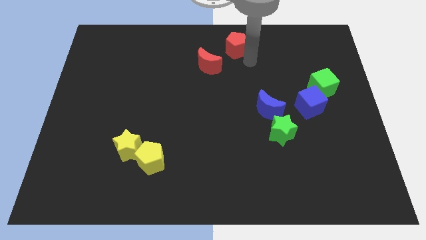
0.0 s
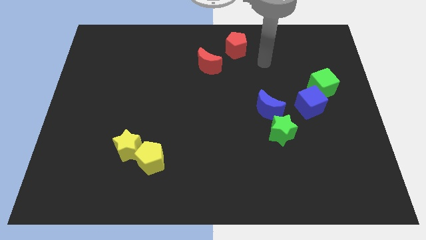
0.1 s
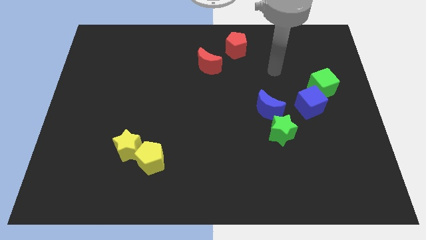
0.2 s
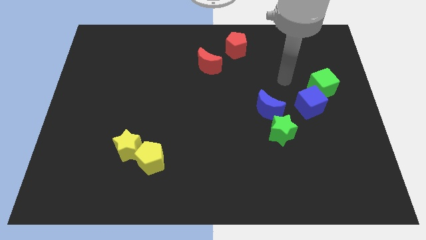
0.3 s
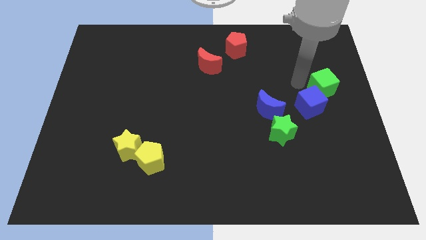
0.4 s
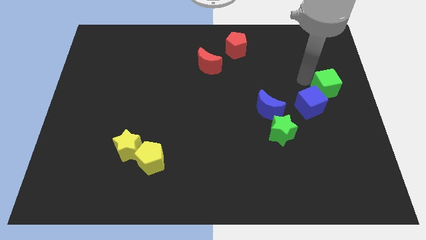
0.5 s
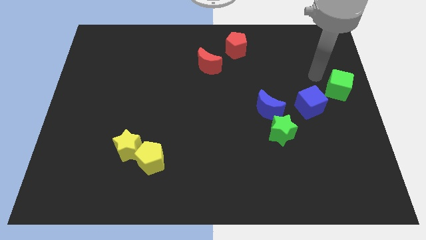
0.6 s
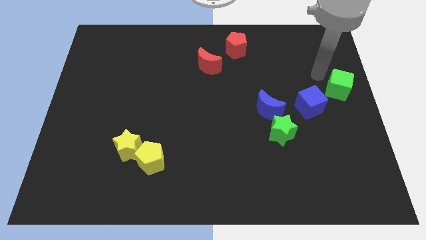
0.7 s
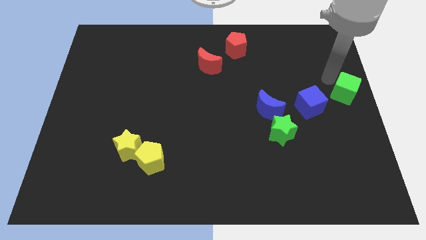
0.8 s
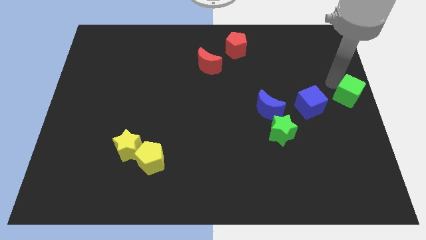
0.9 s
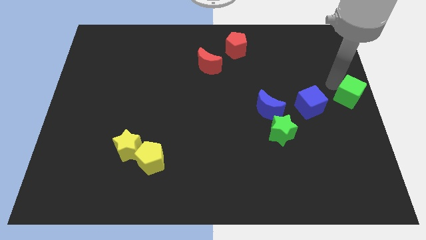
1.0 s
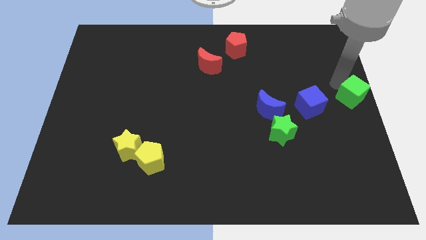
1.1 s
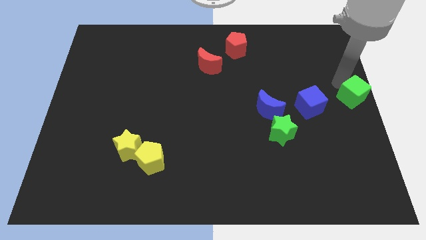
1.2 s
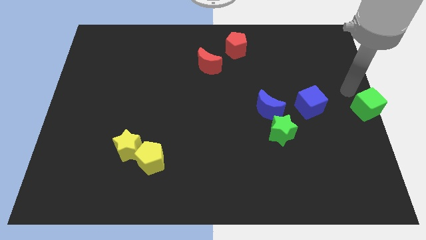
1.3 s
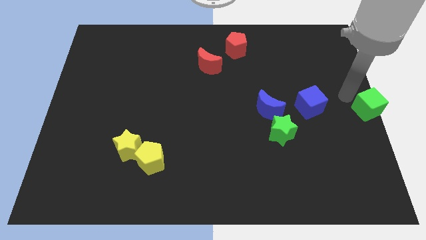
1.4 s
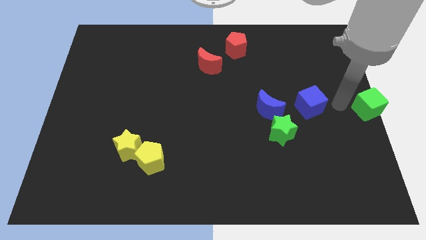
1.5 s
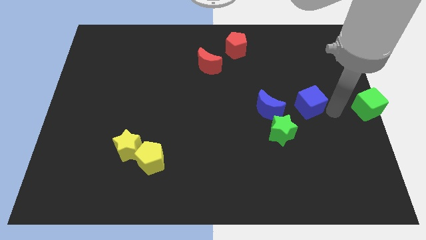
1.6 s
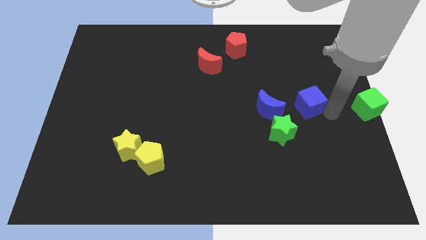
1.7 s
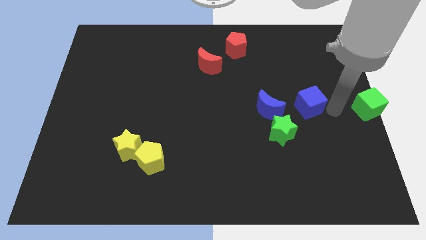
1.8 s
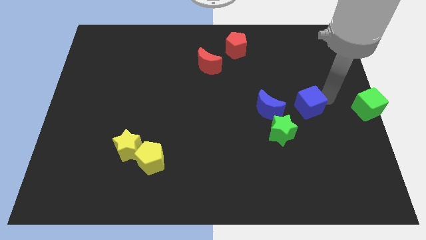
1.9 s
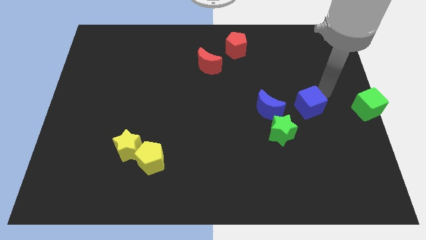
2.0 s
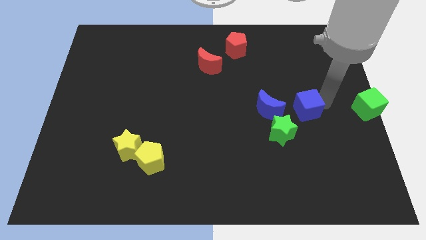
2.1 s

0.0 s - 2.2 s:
move the green cube to the right center of the board

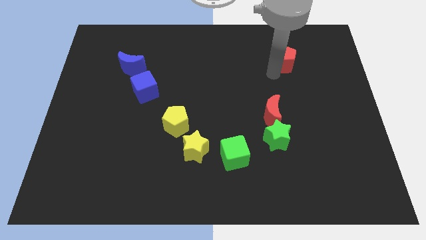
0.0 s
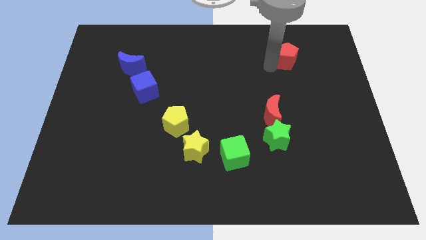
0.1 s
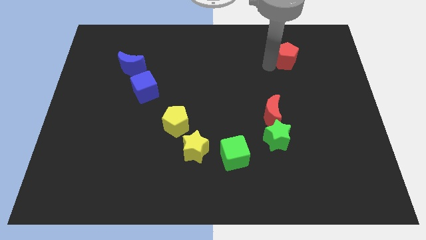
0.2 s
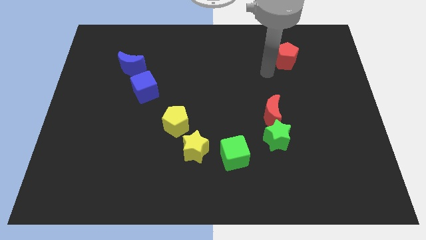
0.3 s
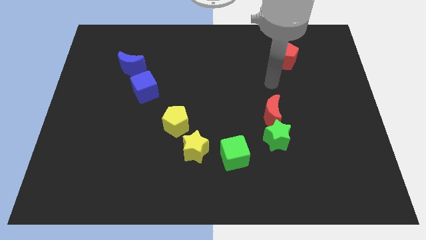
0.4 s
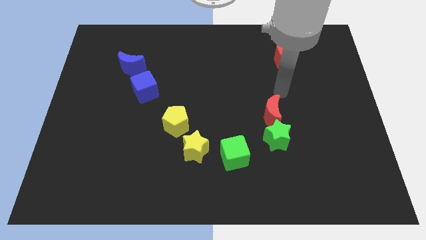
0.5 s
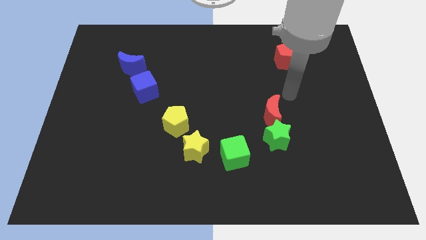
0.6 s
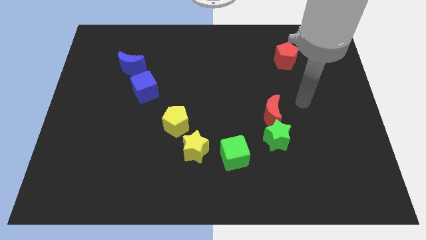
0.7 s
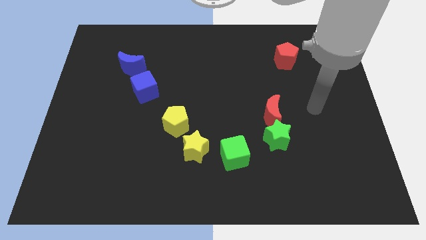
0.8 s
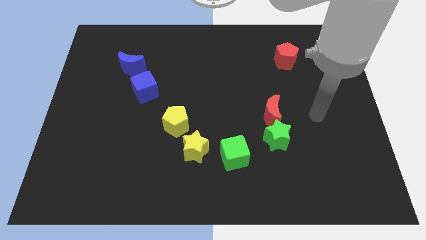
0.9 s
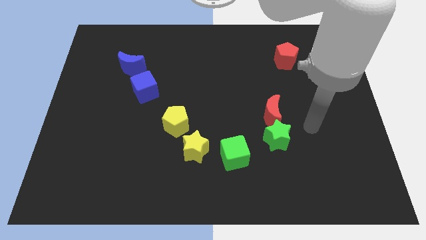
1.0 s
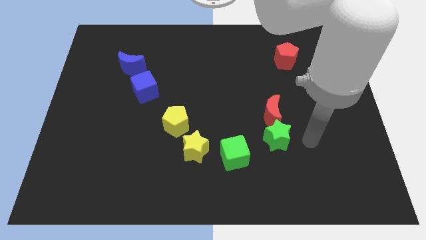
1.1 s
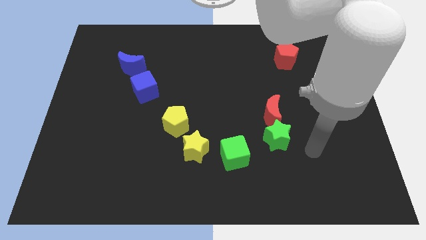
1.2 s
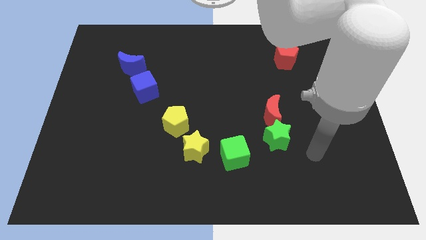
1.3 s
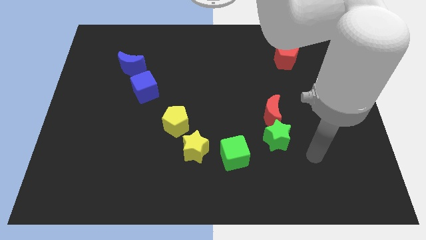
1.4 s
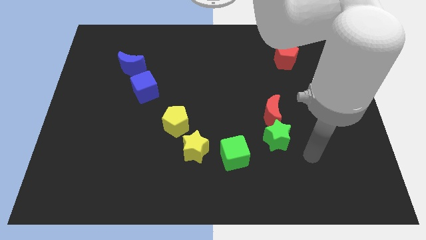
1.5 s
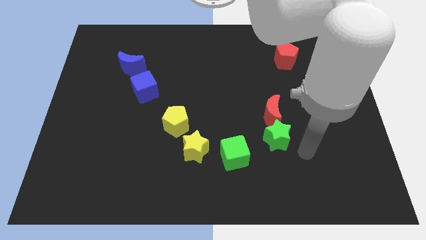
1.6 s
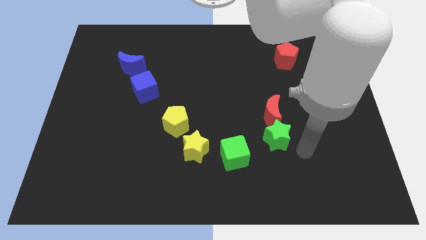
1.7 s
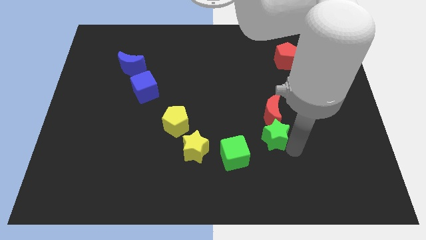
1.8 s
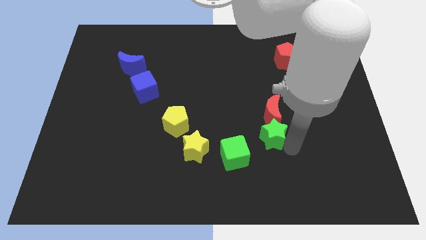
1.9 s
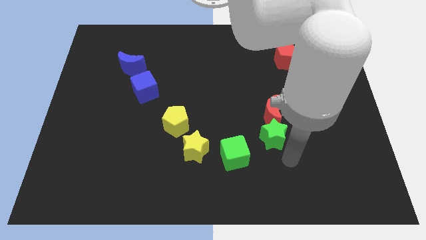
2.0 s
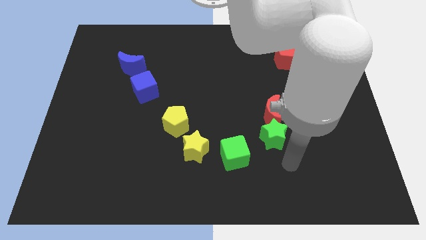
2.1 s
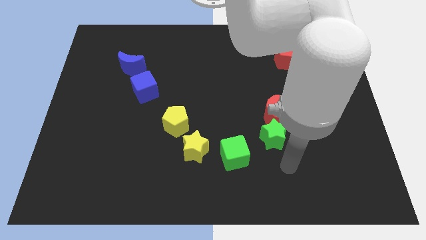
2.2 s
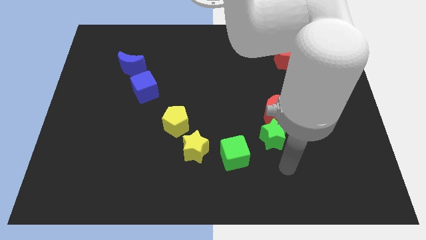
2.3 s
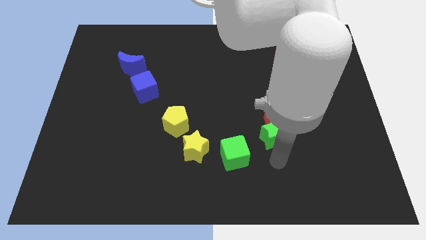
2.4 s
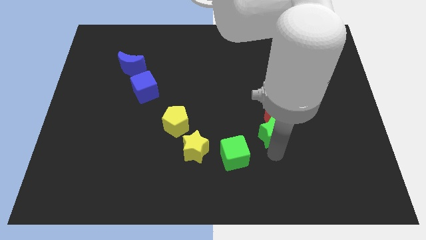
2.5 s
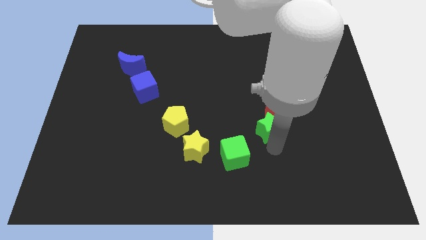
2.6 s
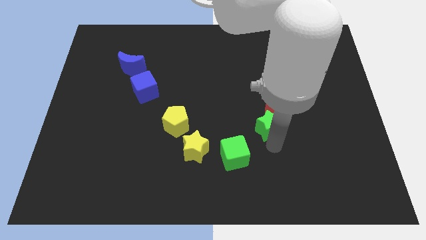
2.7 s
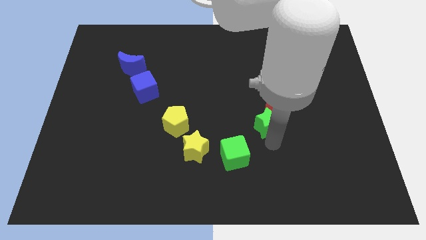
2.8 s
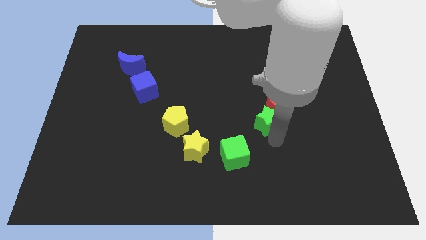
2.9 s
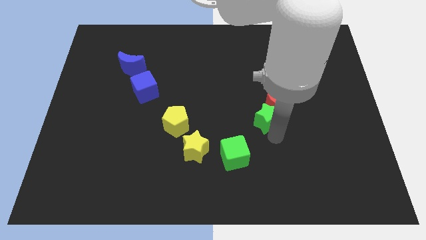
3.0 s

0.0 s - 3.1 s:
slide green star into red moon

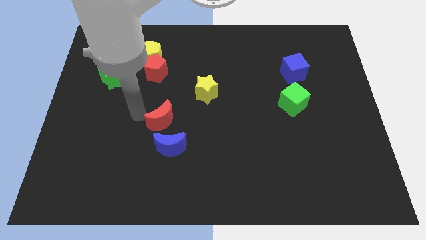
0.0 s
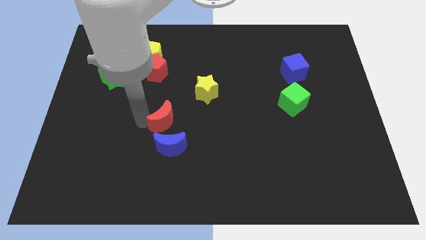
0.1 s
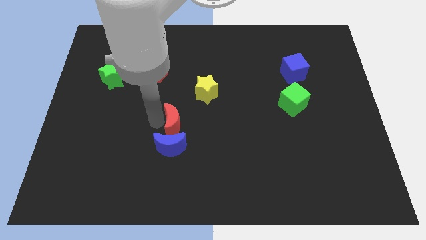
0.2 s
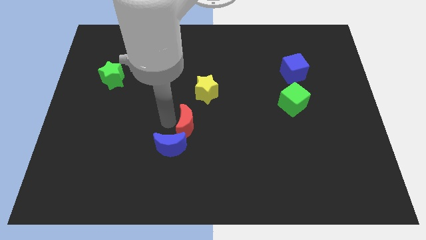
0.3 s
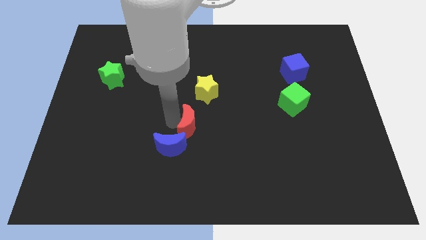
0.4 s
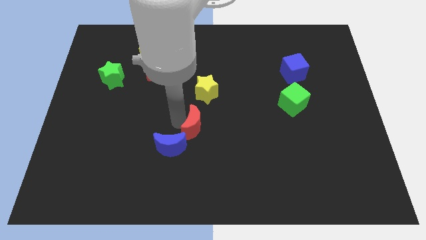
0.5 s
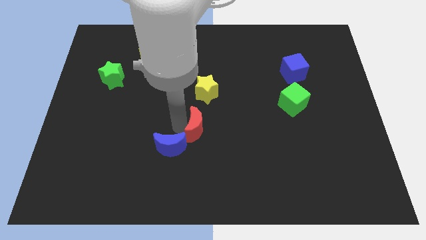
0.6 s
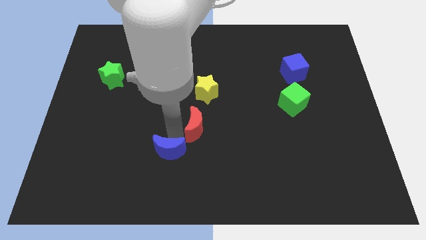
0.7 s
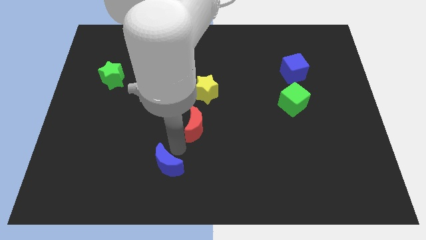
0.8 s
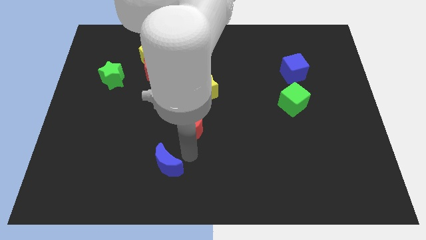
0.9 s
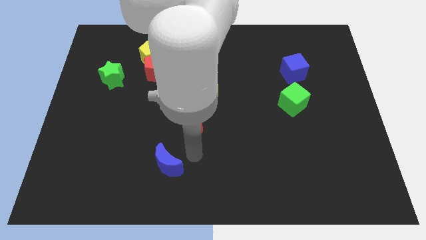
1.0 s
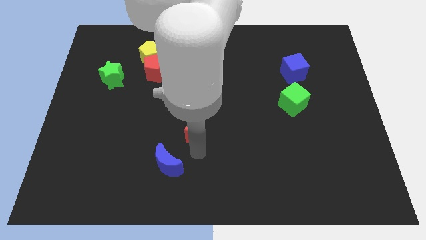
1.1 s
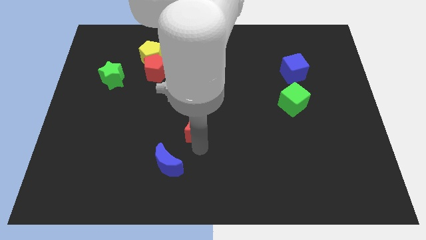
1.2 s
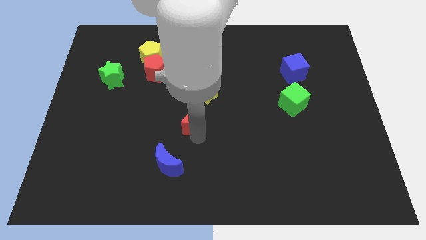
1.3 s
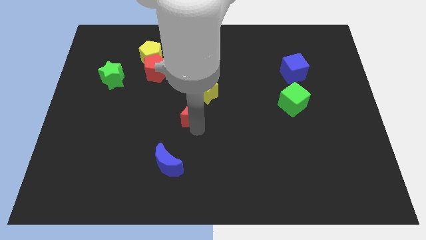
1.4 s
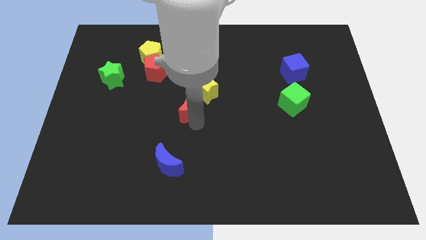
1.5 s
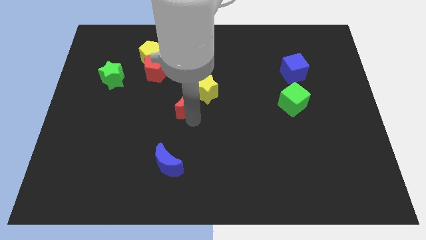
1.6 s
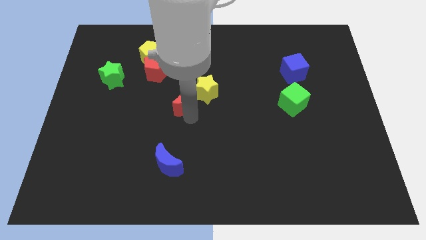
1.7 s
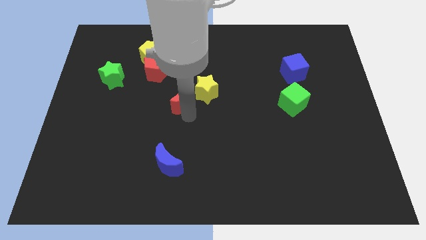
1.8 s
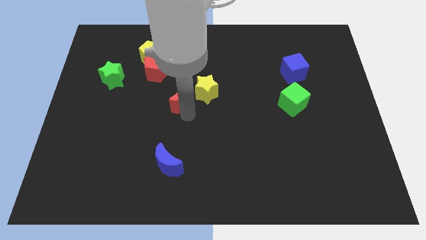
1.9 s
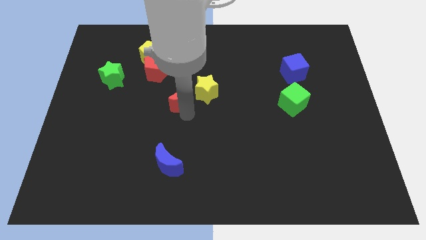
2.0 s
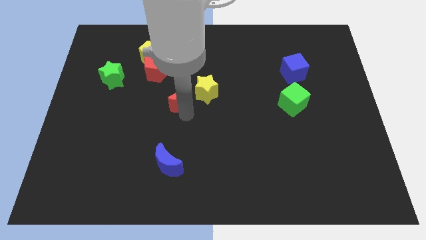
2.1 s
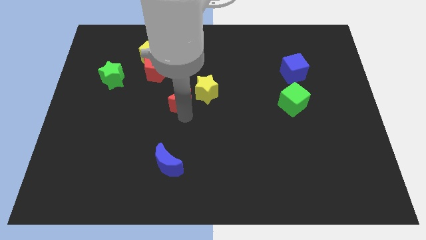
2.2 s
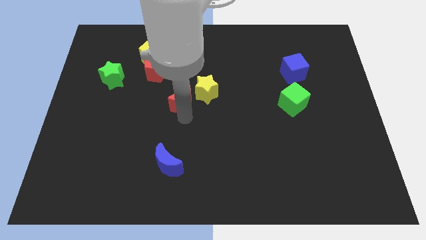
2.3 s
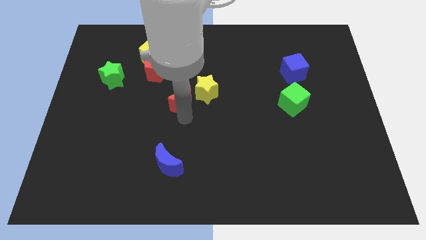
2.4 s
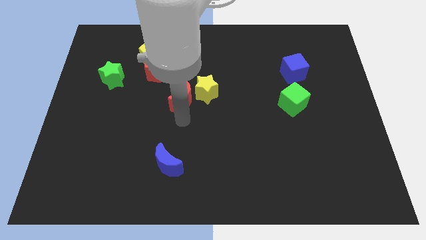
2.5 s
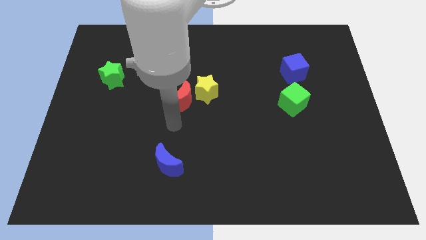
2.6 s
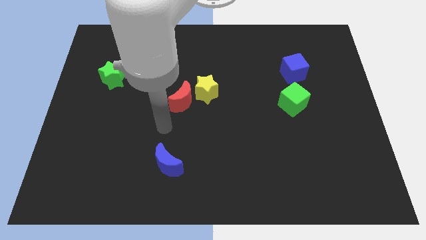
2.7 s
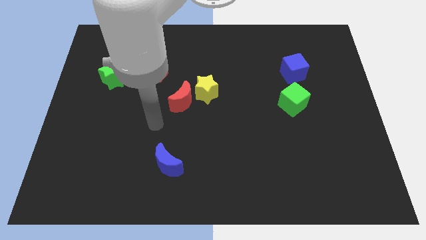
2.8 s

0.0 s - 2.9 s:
place red moon beside yellow star

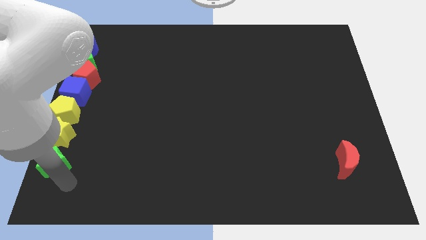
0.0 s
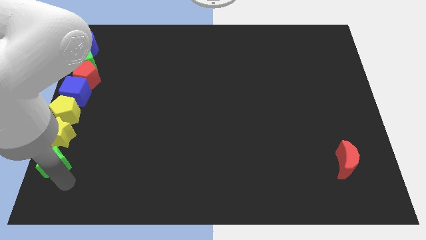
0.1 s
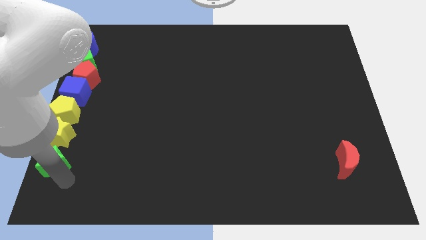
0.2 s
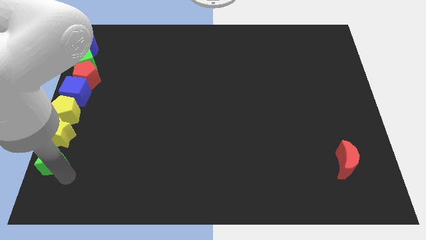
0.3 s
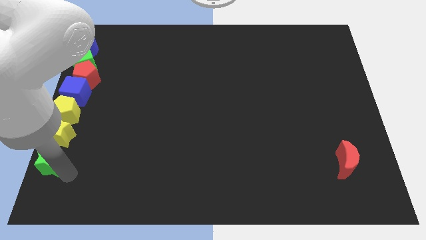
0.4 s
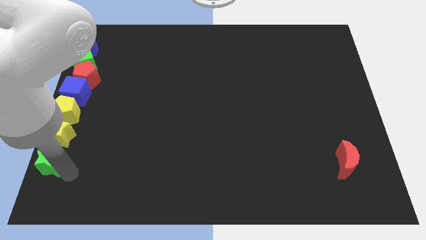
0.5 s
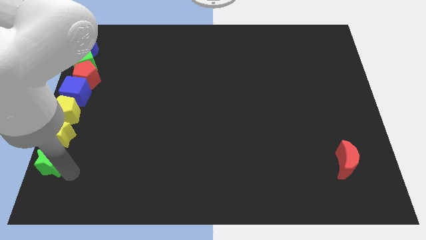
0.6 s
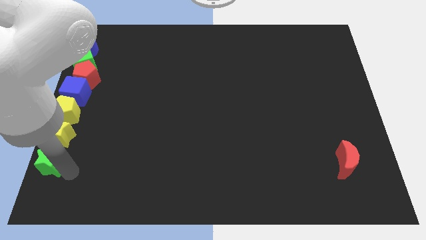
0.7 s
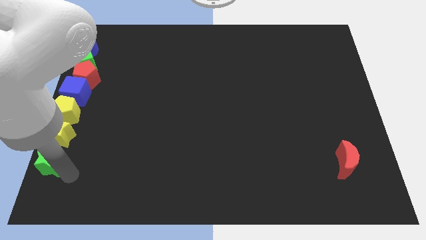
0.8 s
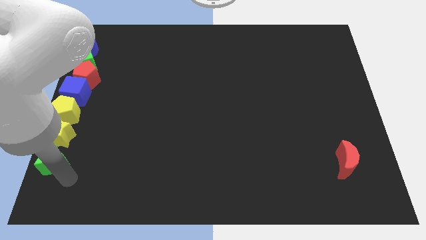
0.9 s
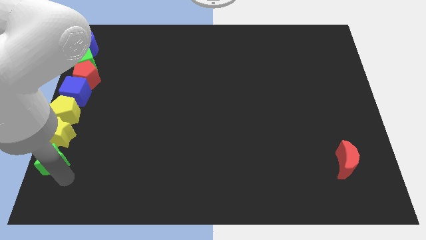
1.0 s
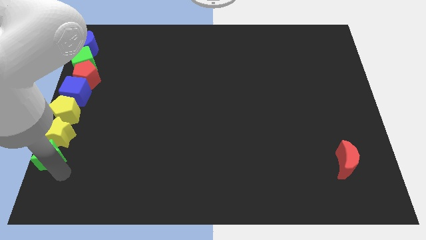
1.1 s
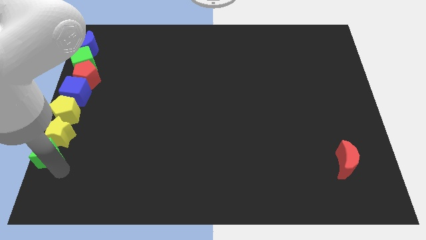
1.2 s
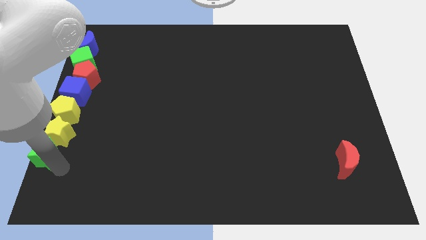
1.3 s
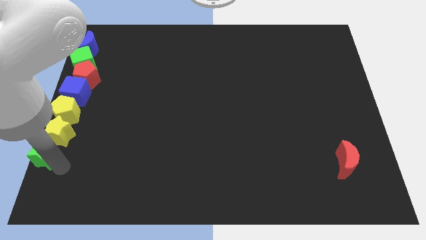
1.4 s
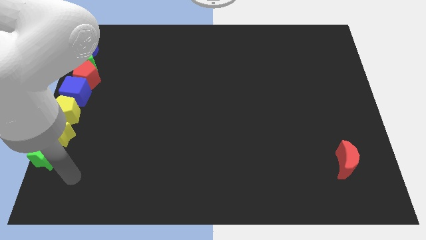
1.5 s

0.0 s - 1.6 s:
place the green star below the yellow star
